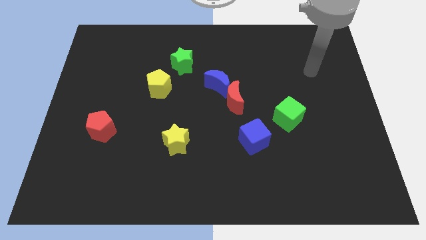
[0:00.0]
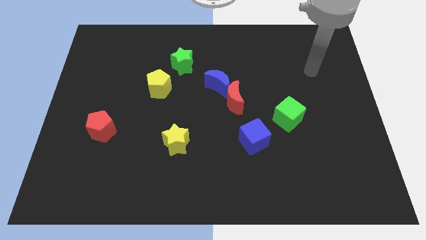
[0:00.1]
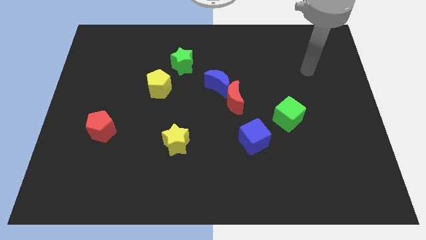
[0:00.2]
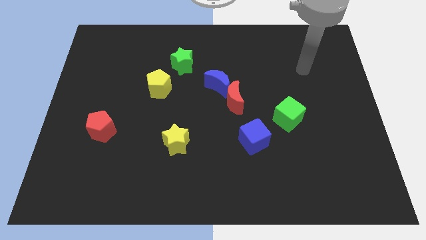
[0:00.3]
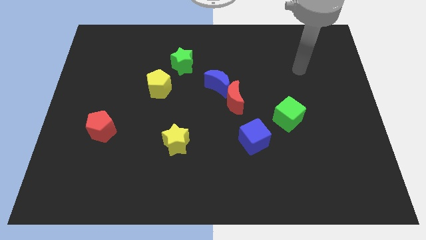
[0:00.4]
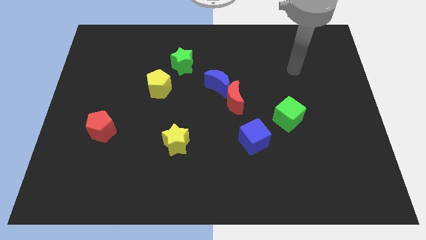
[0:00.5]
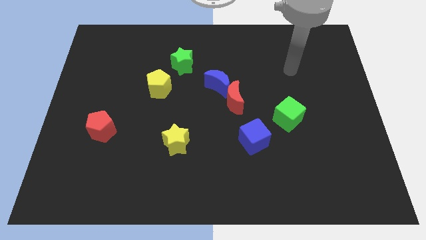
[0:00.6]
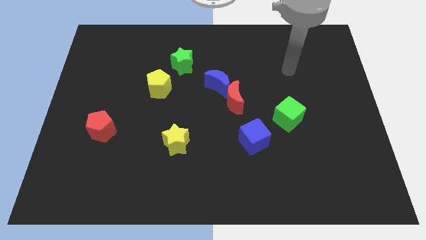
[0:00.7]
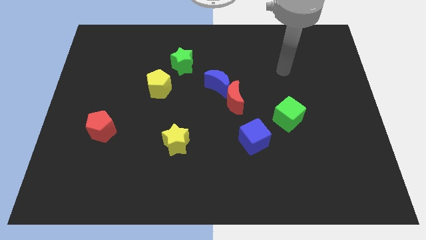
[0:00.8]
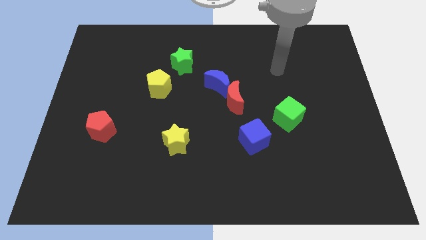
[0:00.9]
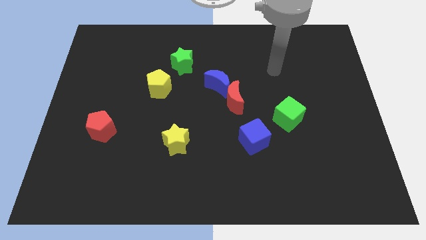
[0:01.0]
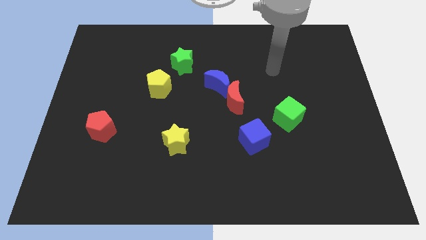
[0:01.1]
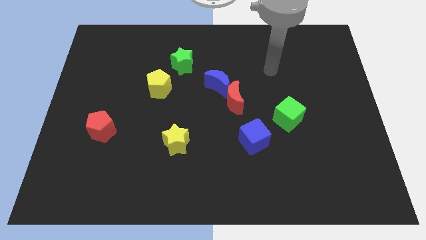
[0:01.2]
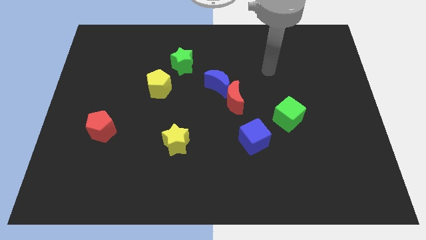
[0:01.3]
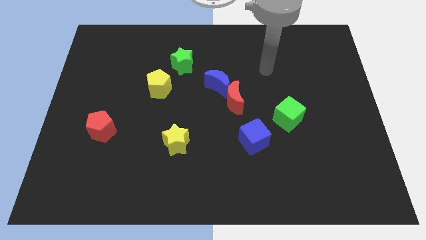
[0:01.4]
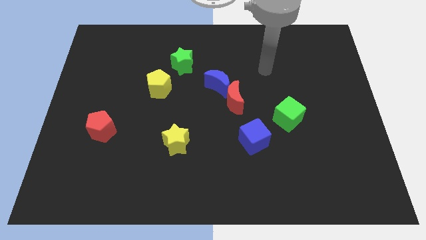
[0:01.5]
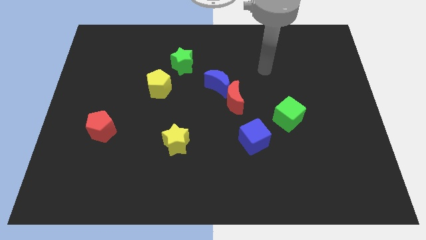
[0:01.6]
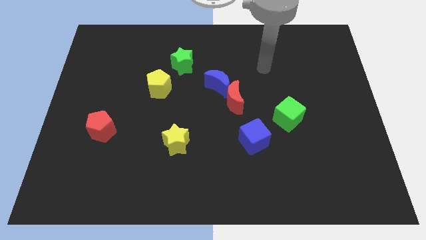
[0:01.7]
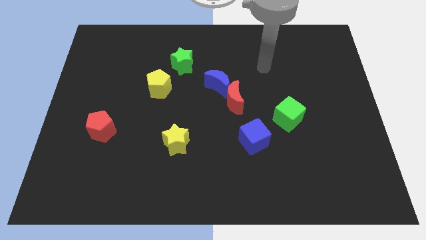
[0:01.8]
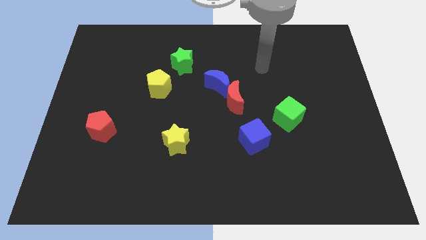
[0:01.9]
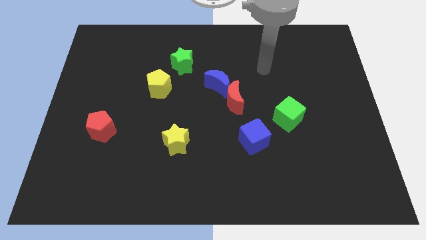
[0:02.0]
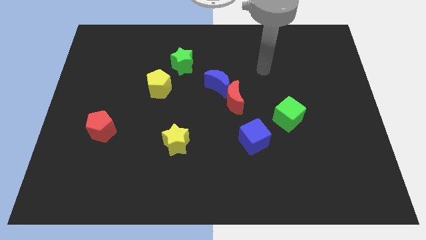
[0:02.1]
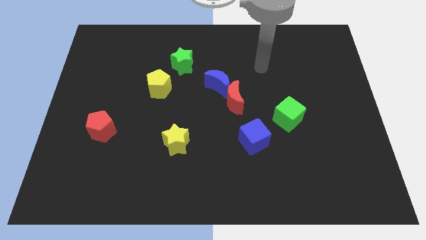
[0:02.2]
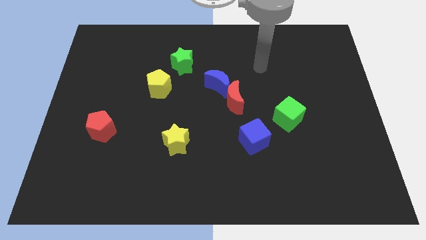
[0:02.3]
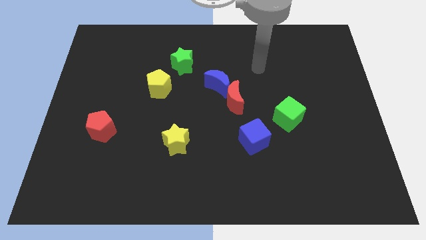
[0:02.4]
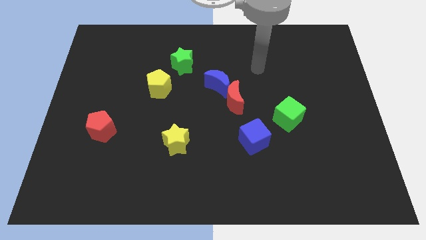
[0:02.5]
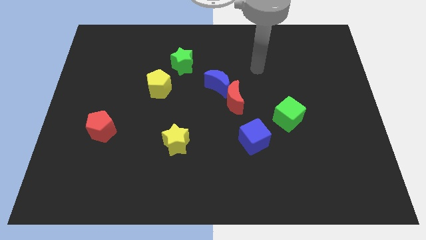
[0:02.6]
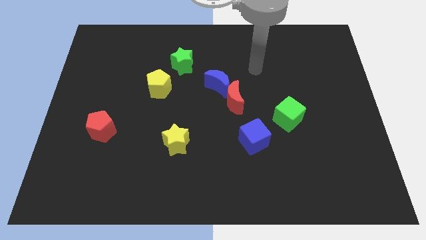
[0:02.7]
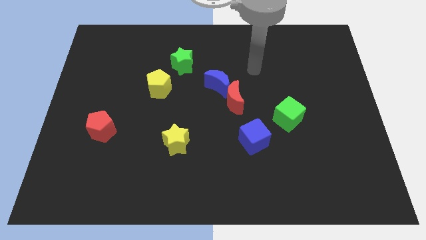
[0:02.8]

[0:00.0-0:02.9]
move your arm towards the left side of the board

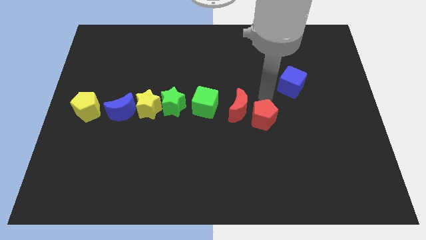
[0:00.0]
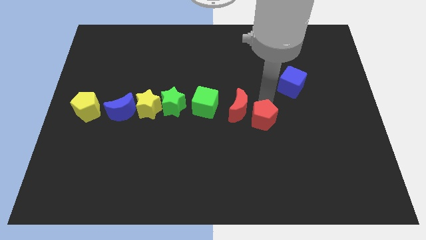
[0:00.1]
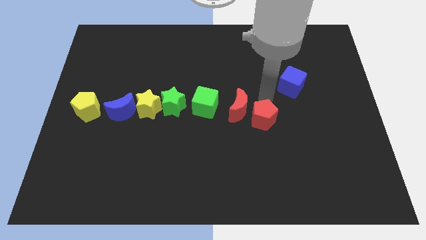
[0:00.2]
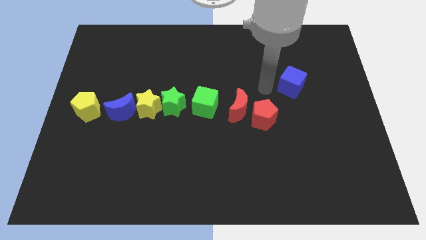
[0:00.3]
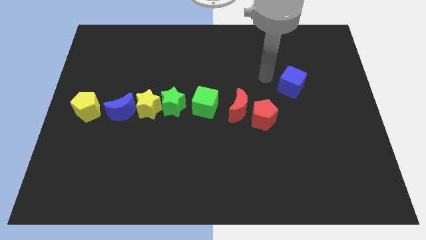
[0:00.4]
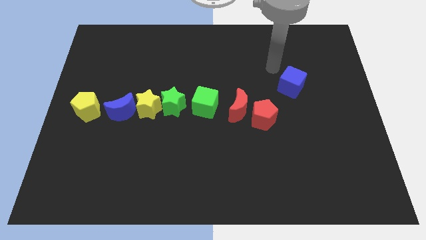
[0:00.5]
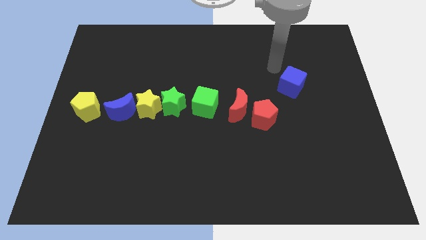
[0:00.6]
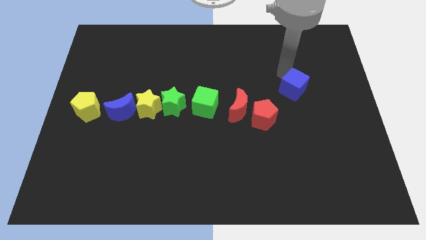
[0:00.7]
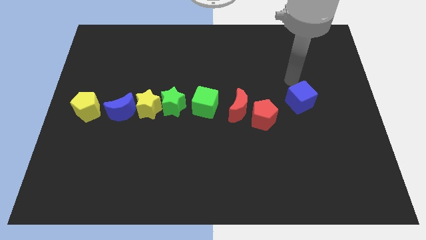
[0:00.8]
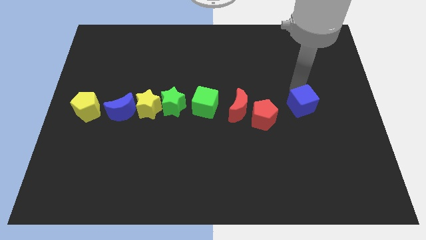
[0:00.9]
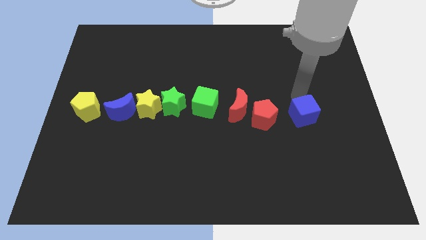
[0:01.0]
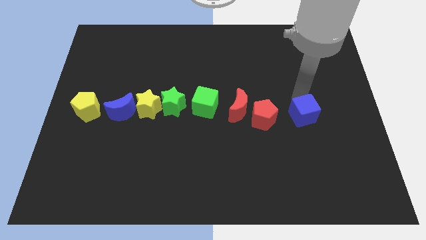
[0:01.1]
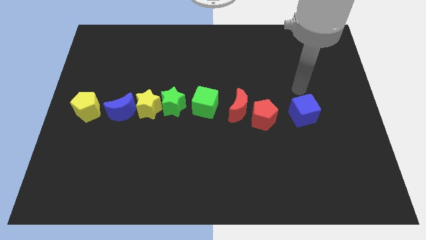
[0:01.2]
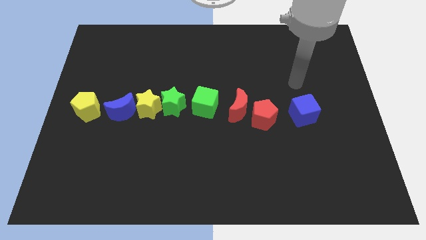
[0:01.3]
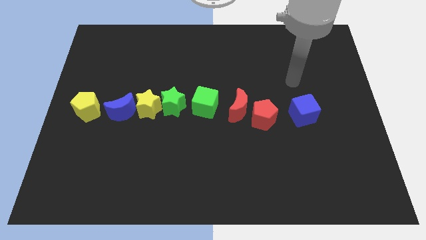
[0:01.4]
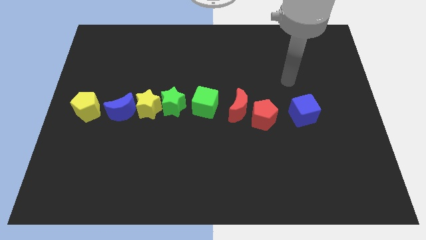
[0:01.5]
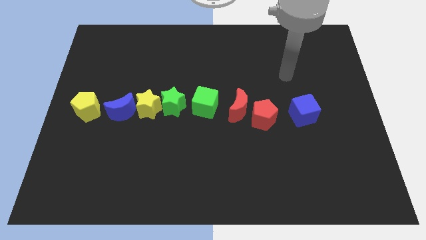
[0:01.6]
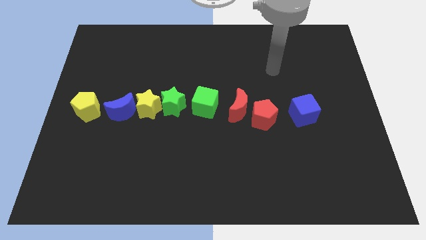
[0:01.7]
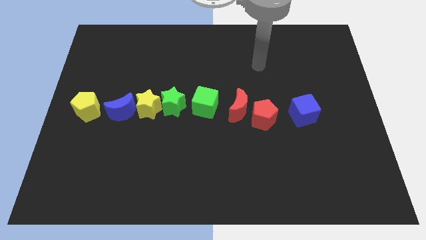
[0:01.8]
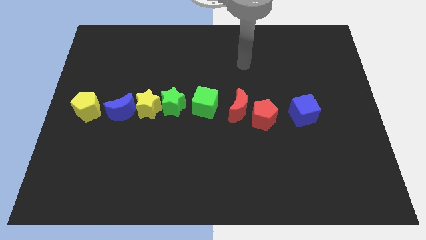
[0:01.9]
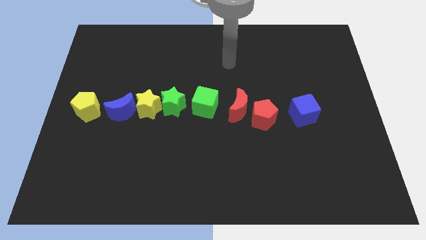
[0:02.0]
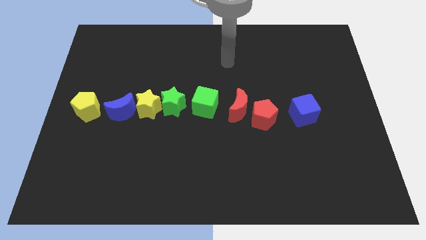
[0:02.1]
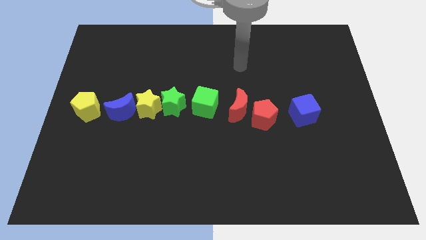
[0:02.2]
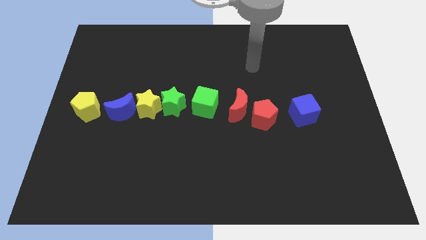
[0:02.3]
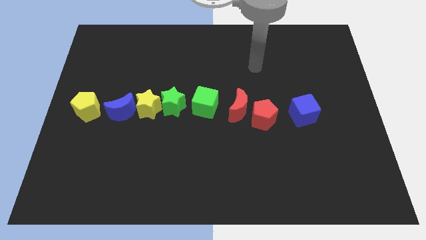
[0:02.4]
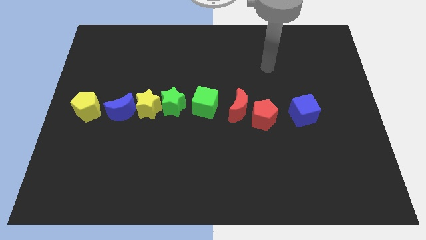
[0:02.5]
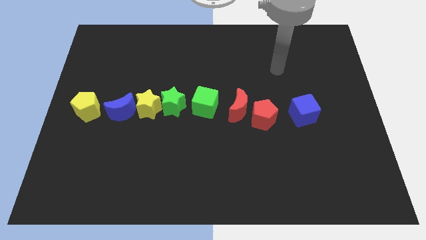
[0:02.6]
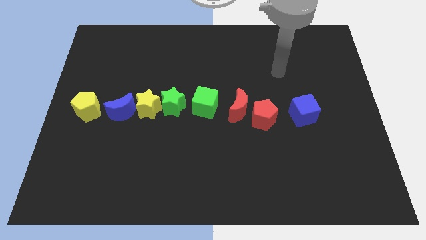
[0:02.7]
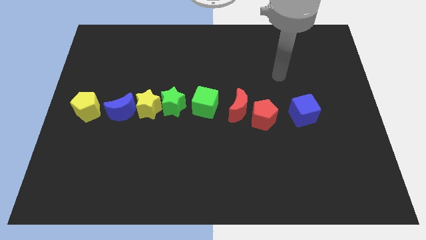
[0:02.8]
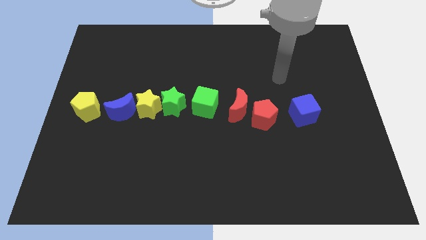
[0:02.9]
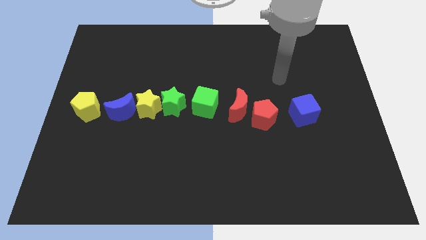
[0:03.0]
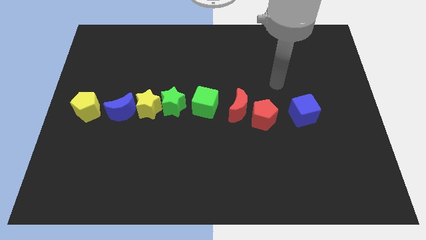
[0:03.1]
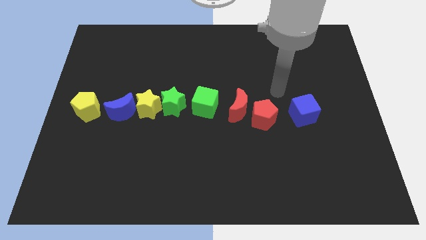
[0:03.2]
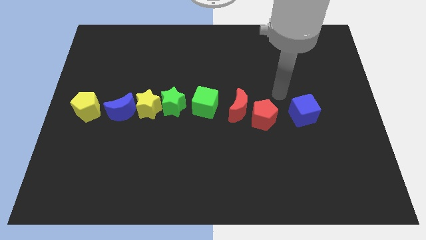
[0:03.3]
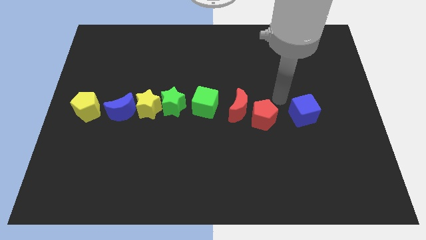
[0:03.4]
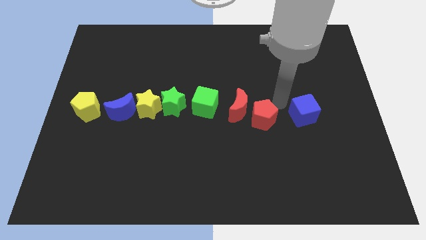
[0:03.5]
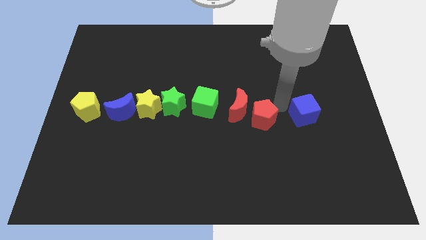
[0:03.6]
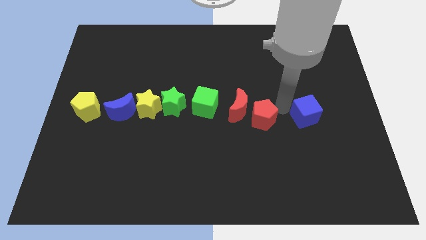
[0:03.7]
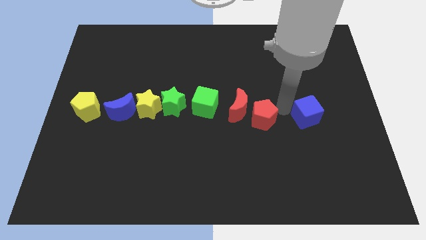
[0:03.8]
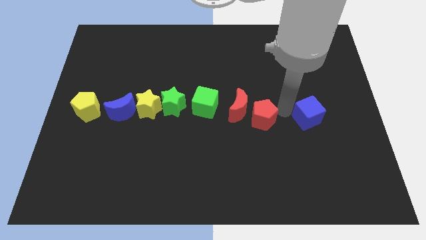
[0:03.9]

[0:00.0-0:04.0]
push the blue cube slightly downward

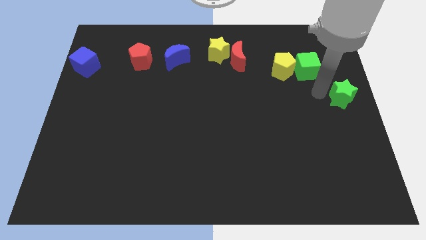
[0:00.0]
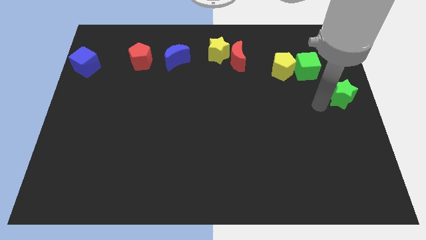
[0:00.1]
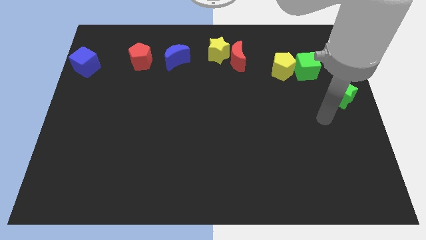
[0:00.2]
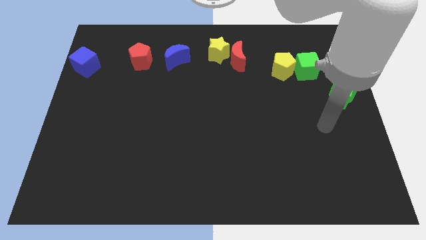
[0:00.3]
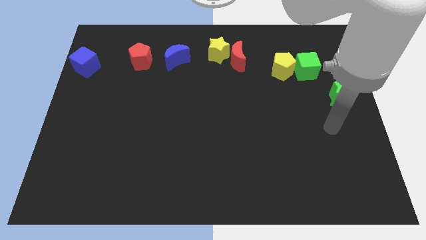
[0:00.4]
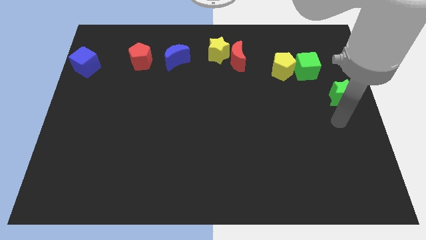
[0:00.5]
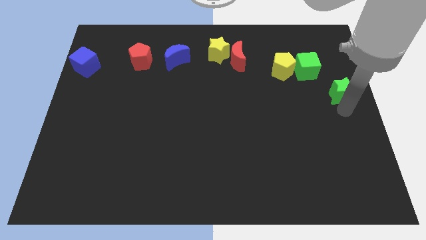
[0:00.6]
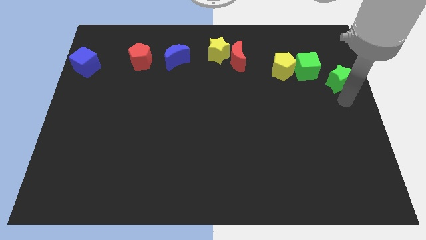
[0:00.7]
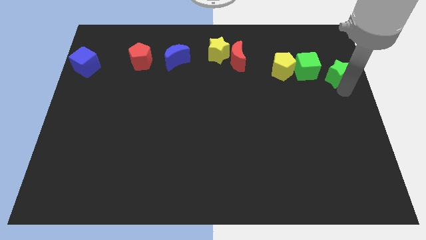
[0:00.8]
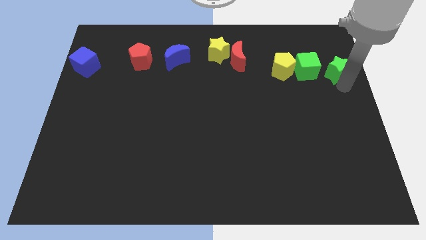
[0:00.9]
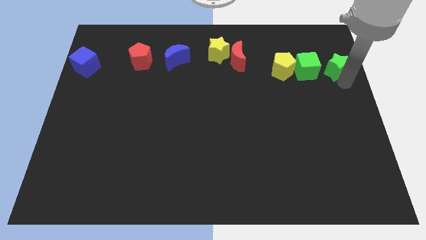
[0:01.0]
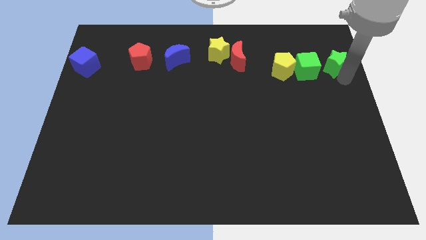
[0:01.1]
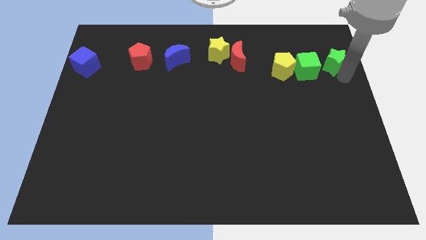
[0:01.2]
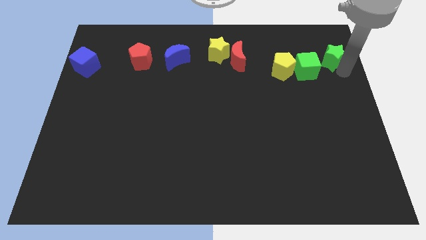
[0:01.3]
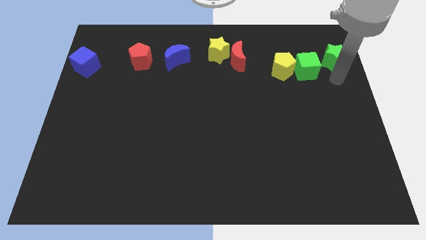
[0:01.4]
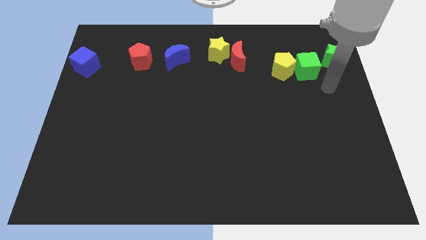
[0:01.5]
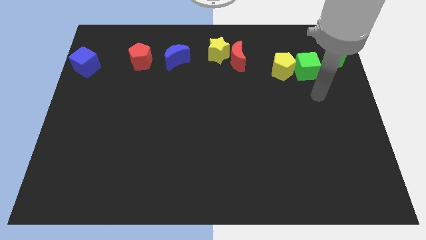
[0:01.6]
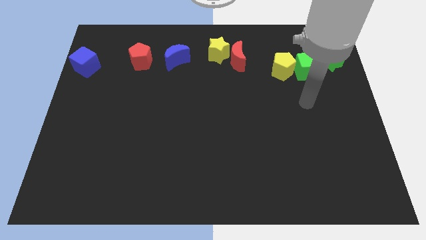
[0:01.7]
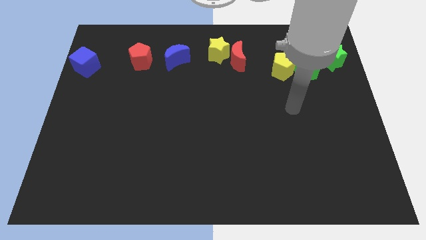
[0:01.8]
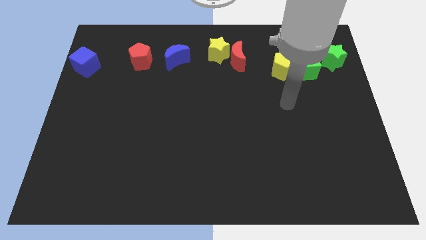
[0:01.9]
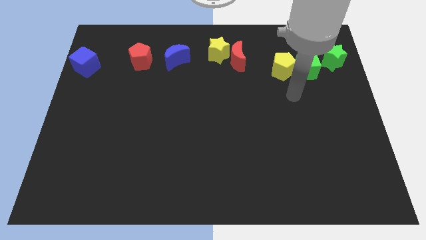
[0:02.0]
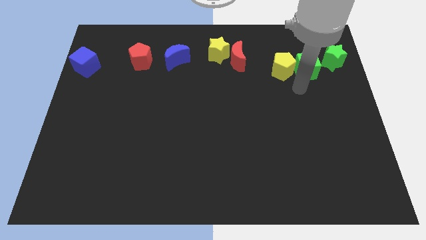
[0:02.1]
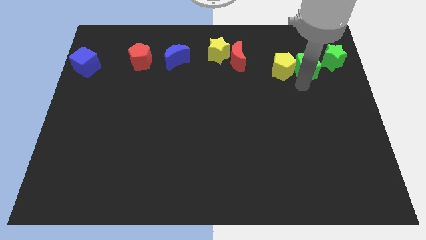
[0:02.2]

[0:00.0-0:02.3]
move the green star to the right of the green cube
